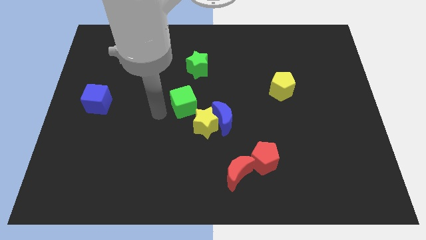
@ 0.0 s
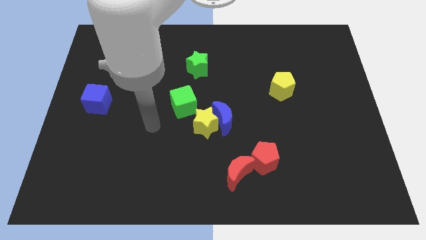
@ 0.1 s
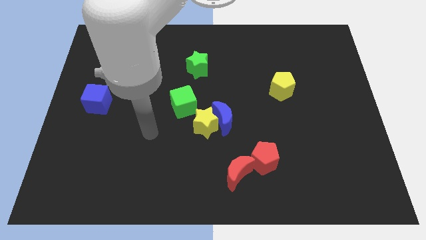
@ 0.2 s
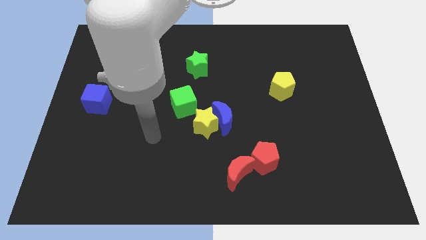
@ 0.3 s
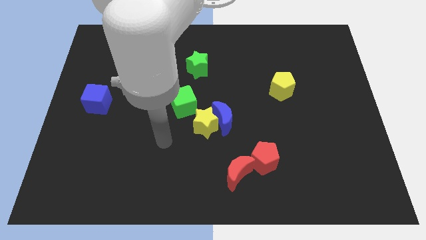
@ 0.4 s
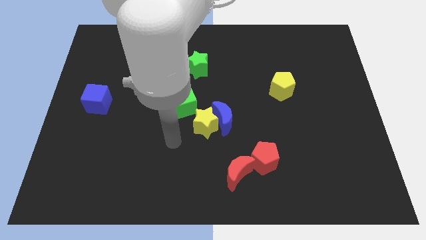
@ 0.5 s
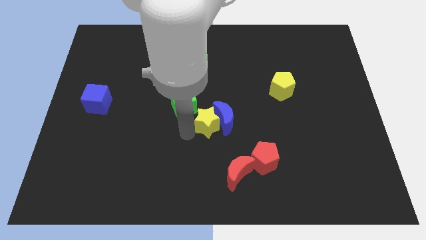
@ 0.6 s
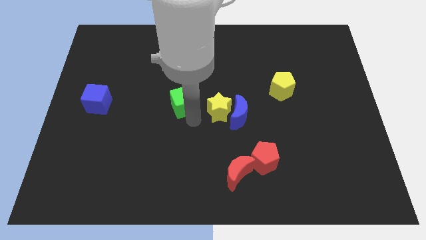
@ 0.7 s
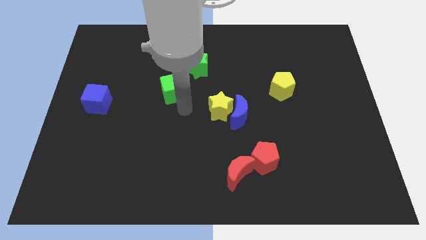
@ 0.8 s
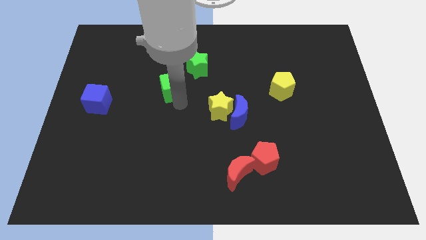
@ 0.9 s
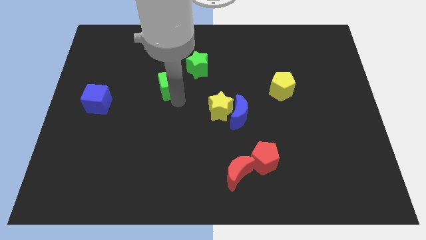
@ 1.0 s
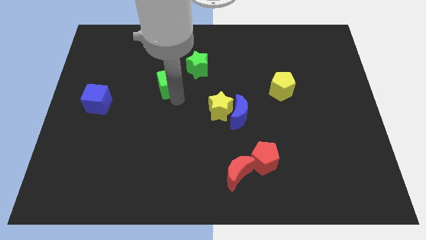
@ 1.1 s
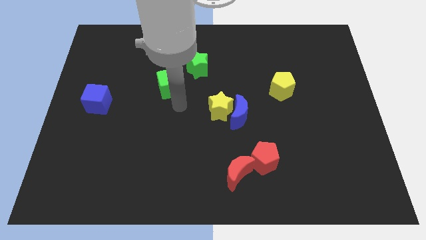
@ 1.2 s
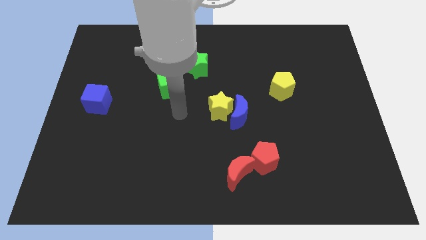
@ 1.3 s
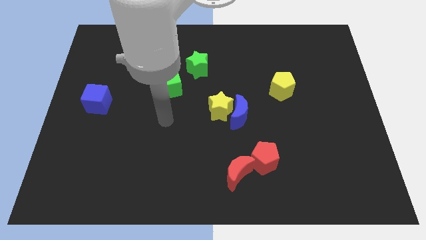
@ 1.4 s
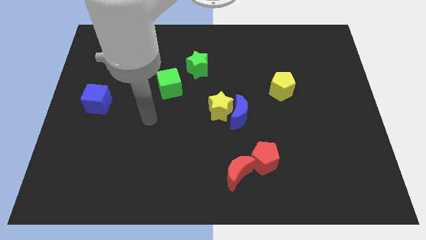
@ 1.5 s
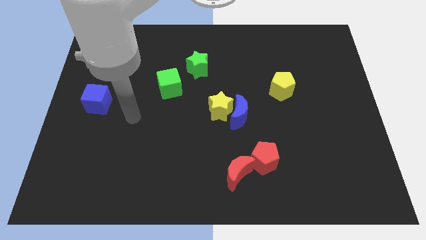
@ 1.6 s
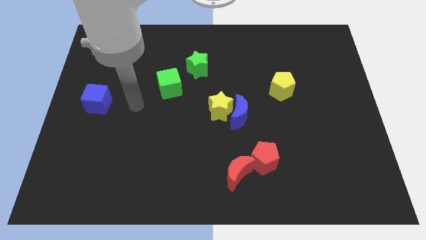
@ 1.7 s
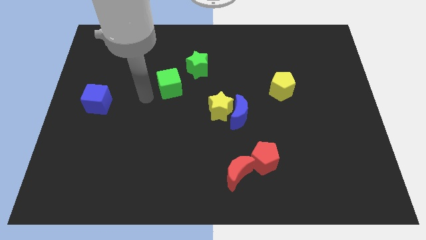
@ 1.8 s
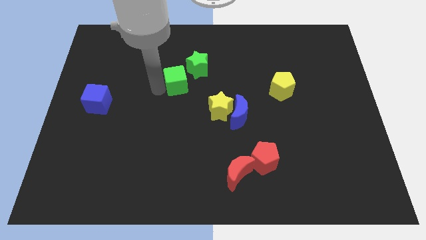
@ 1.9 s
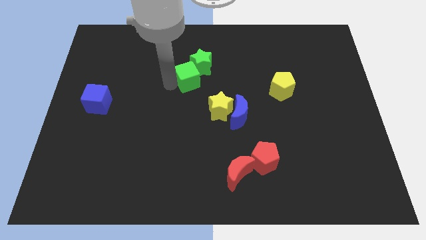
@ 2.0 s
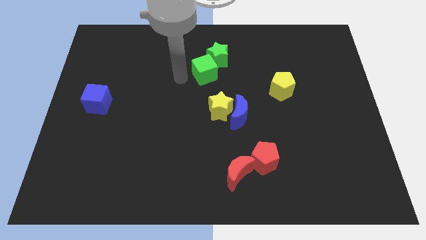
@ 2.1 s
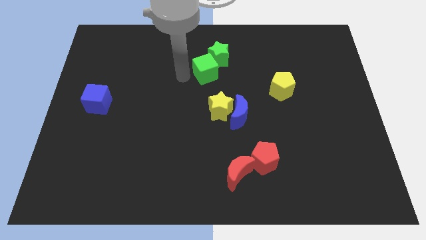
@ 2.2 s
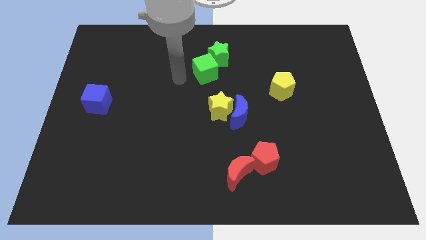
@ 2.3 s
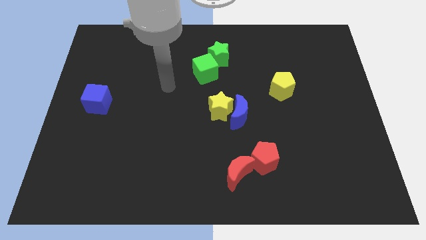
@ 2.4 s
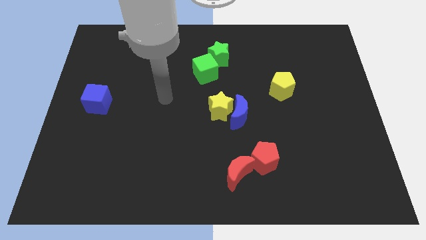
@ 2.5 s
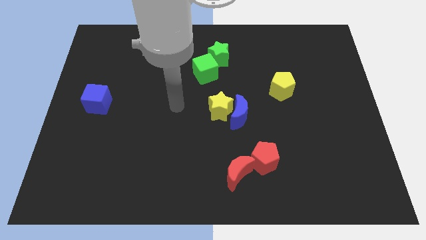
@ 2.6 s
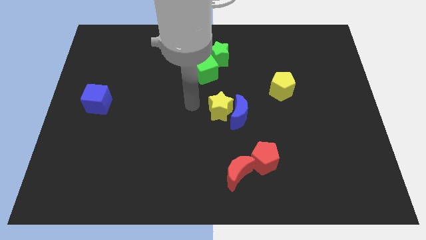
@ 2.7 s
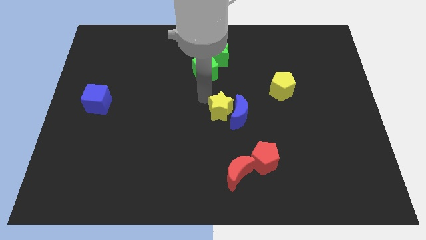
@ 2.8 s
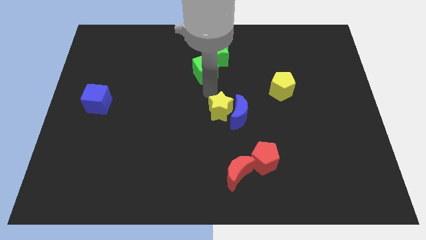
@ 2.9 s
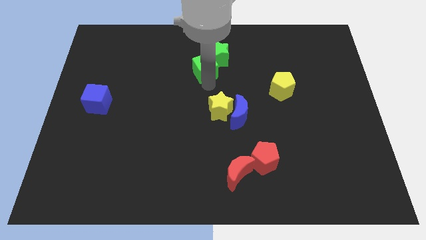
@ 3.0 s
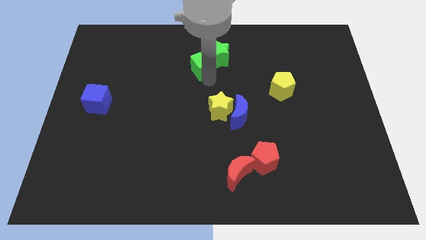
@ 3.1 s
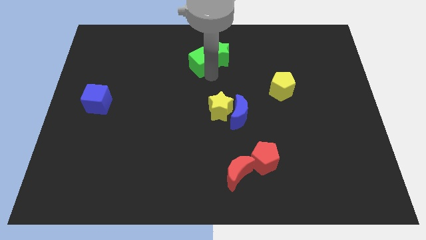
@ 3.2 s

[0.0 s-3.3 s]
push the green cube into the green star

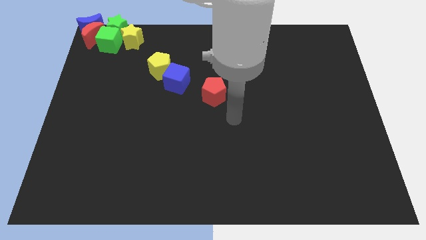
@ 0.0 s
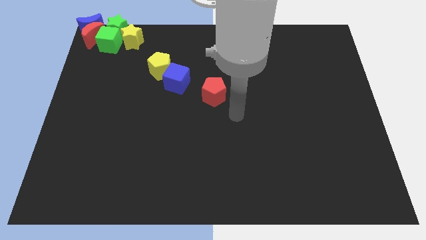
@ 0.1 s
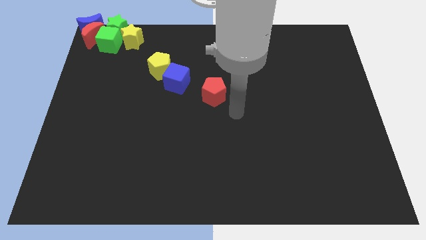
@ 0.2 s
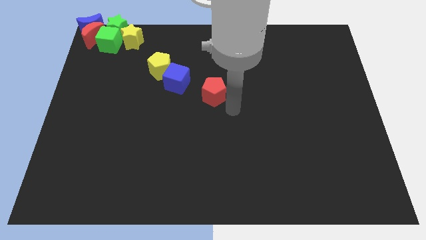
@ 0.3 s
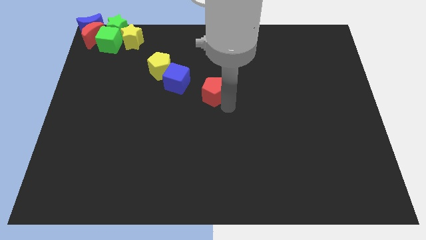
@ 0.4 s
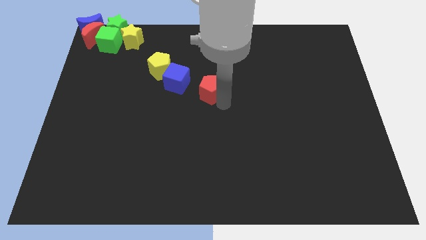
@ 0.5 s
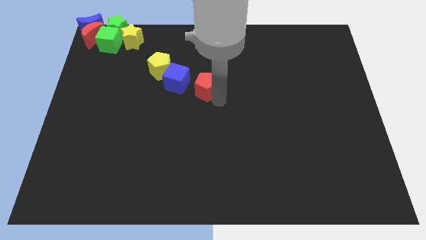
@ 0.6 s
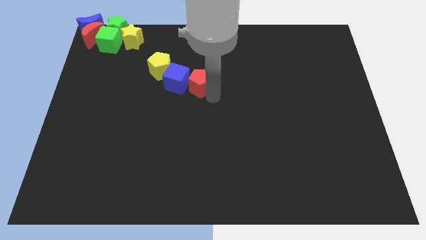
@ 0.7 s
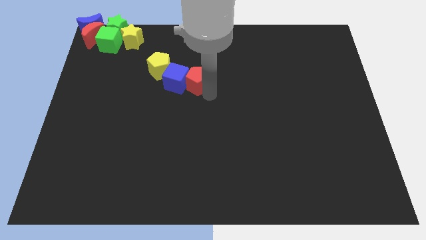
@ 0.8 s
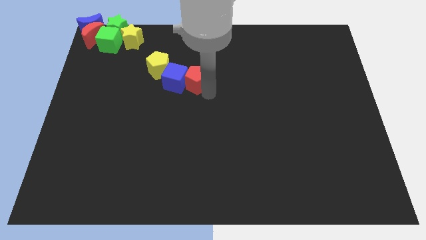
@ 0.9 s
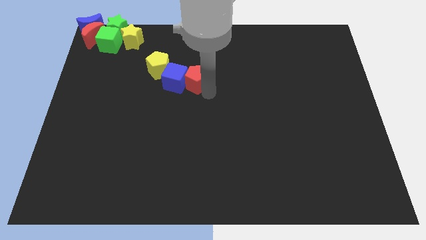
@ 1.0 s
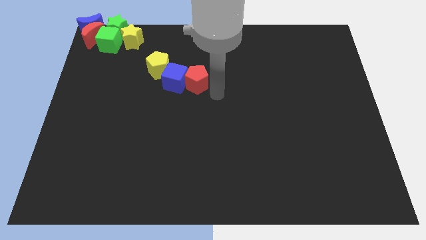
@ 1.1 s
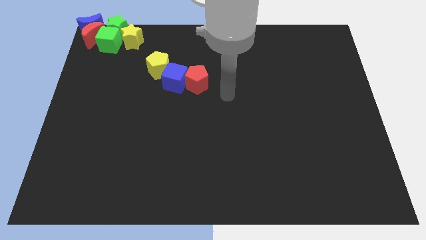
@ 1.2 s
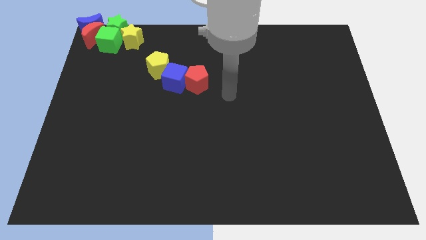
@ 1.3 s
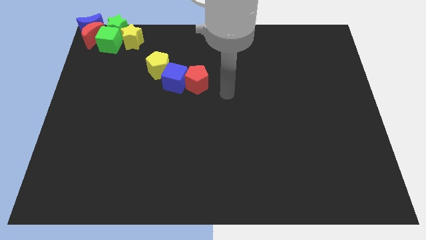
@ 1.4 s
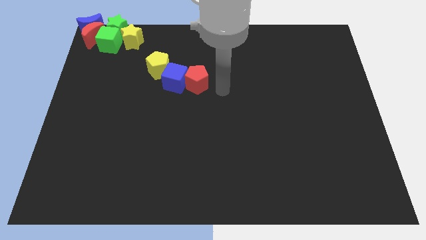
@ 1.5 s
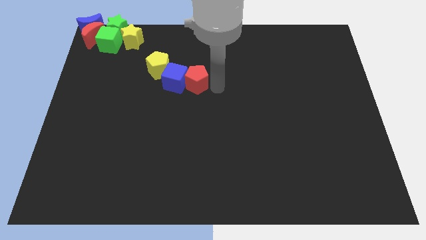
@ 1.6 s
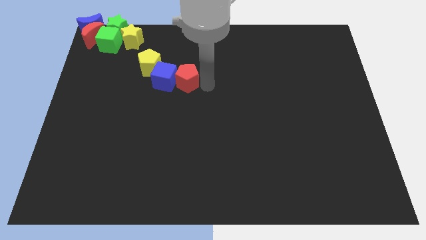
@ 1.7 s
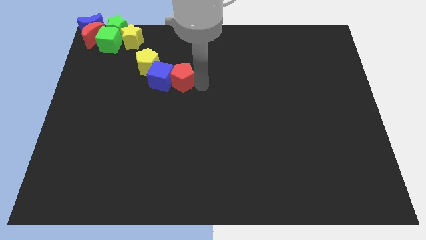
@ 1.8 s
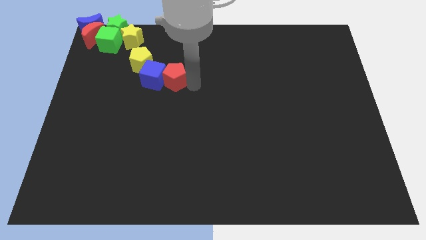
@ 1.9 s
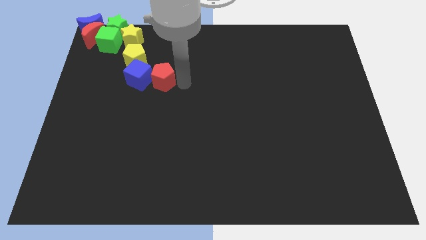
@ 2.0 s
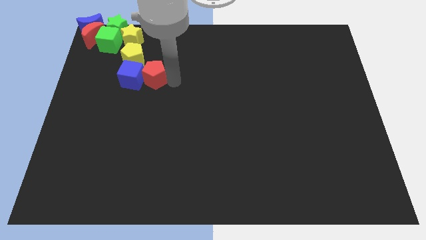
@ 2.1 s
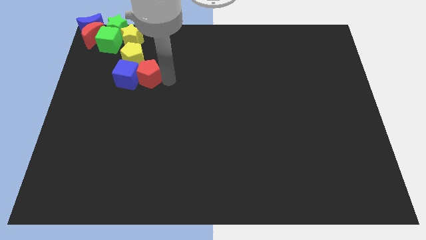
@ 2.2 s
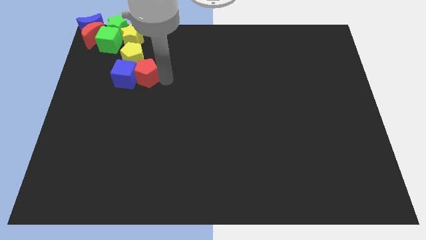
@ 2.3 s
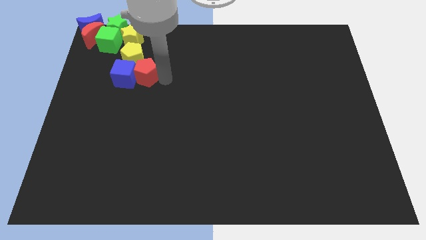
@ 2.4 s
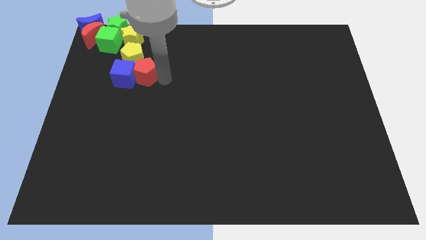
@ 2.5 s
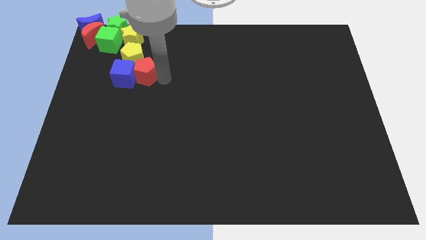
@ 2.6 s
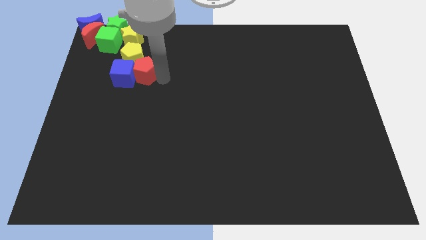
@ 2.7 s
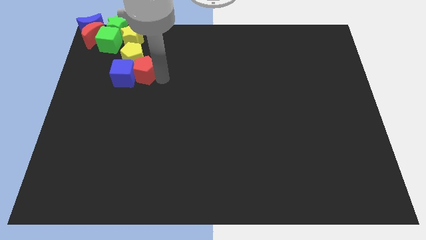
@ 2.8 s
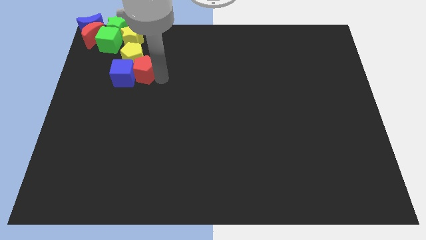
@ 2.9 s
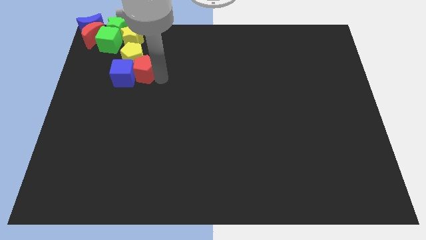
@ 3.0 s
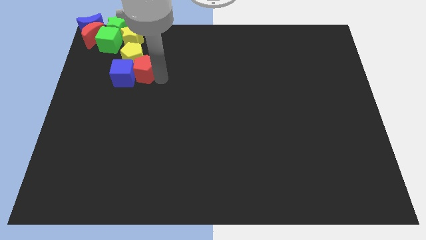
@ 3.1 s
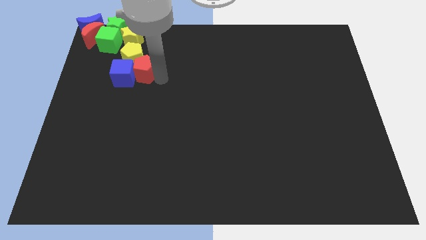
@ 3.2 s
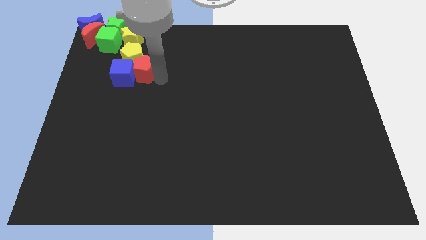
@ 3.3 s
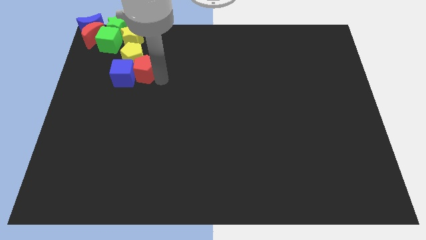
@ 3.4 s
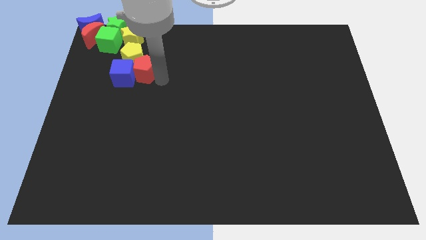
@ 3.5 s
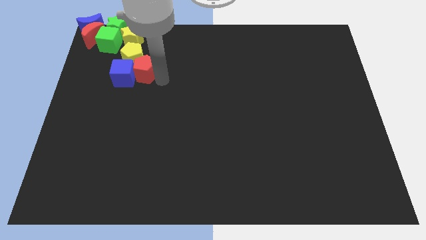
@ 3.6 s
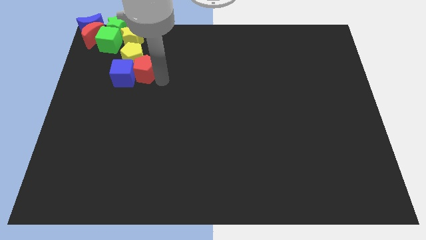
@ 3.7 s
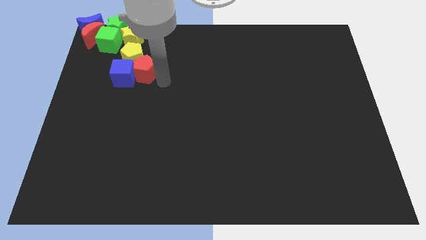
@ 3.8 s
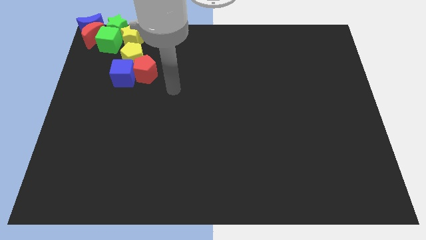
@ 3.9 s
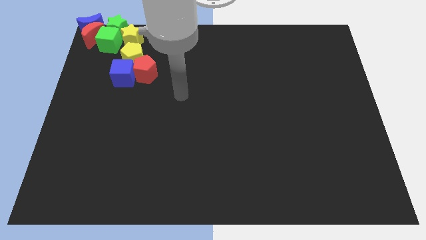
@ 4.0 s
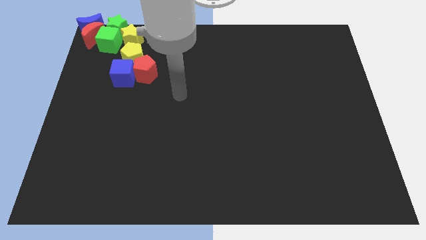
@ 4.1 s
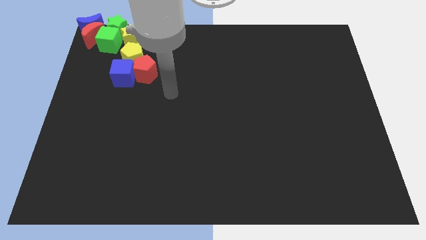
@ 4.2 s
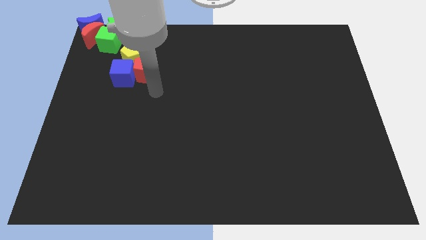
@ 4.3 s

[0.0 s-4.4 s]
push the yellow pentagon and the blue cube with the red pentagon towards the top left of the board

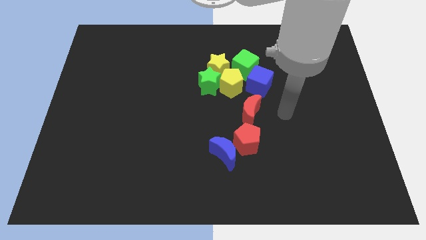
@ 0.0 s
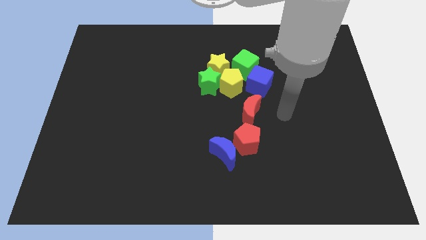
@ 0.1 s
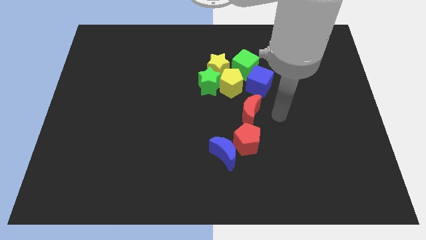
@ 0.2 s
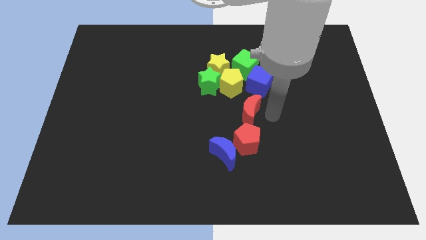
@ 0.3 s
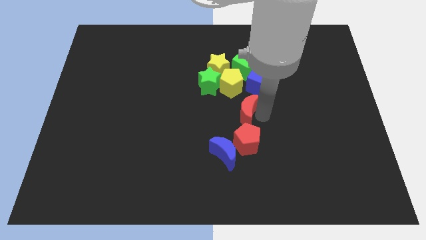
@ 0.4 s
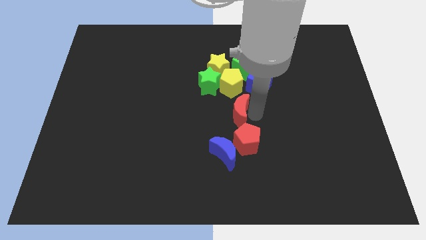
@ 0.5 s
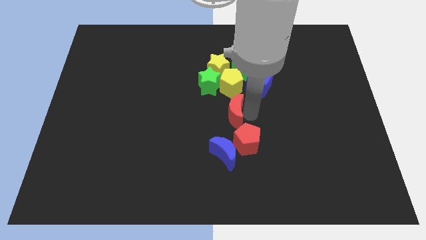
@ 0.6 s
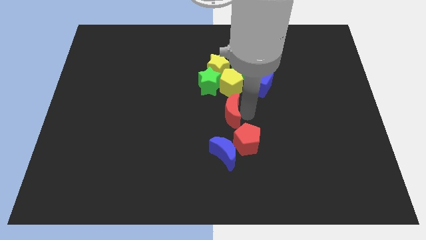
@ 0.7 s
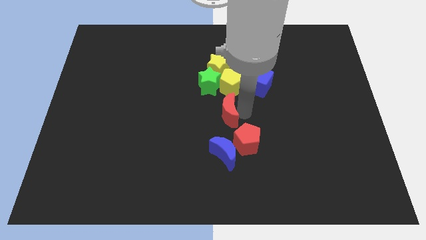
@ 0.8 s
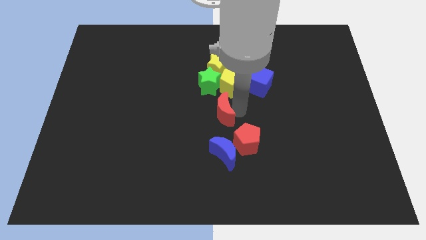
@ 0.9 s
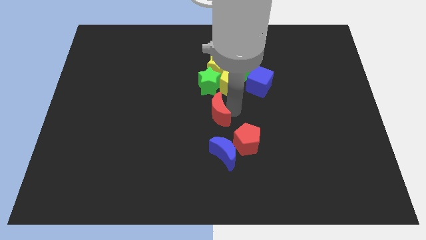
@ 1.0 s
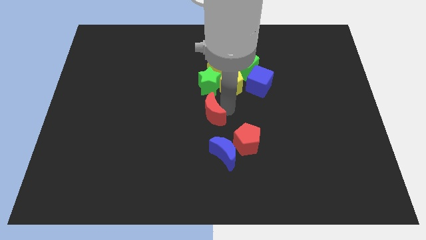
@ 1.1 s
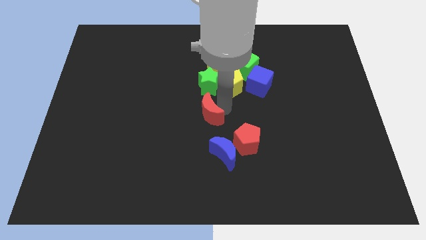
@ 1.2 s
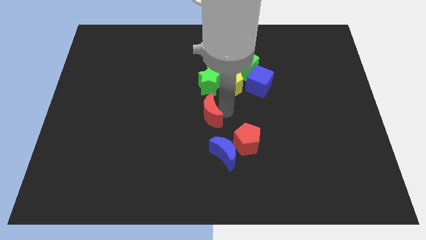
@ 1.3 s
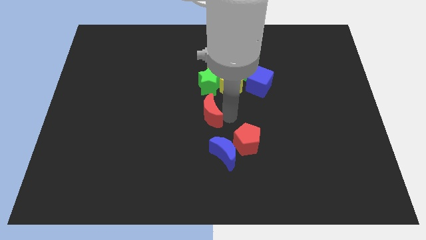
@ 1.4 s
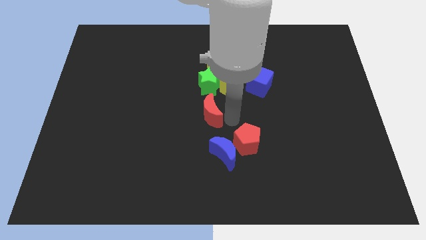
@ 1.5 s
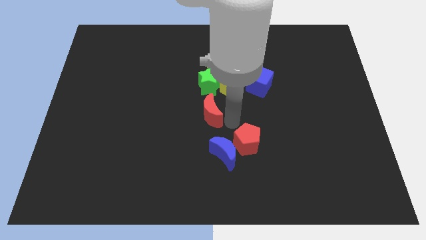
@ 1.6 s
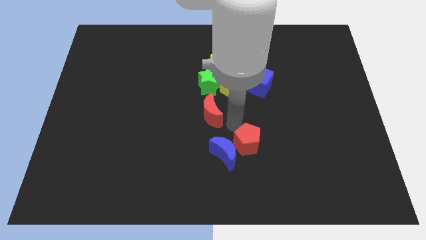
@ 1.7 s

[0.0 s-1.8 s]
push the red crescent in between the green star and the blue crescent
